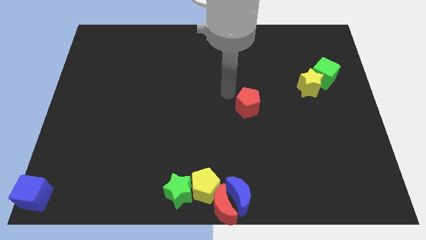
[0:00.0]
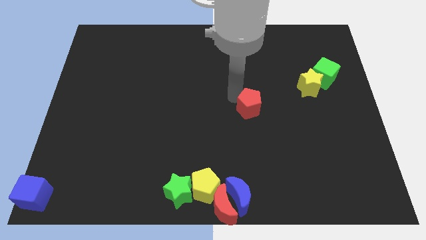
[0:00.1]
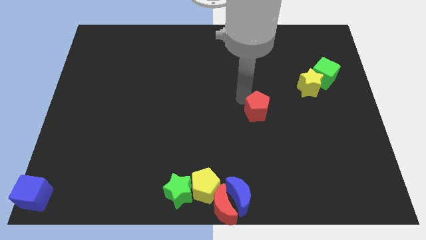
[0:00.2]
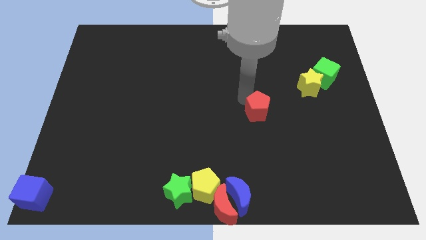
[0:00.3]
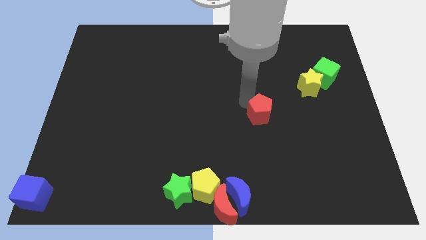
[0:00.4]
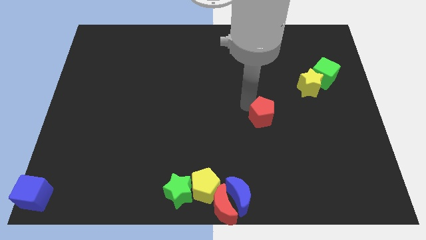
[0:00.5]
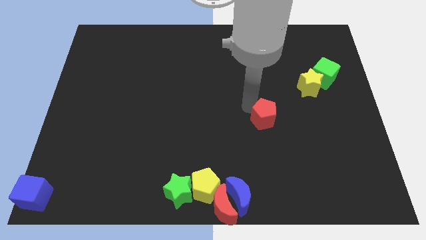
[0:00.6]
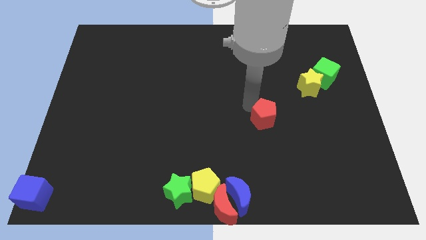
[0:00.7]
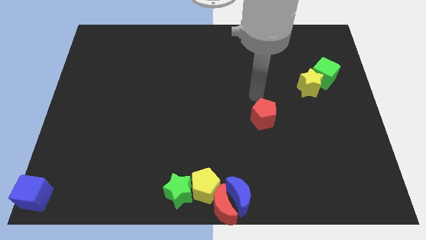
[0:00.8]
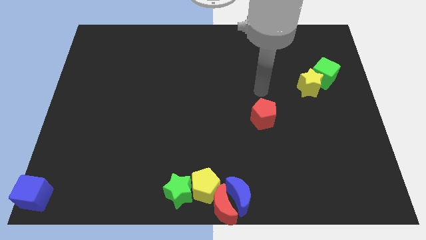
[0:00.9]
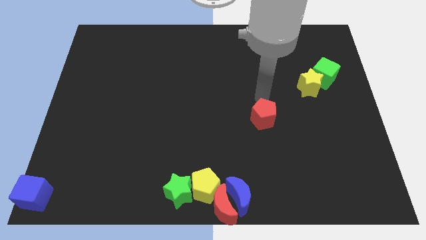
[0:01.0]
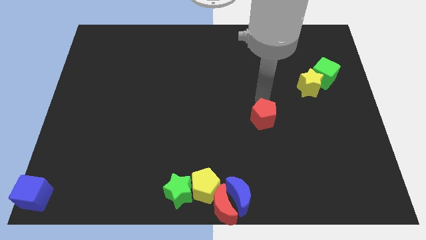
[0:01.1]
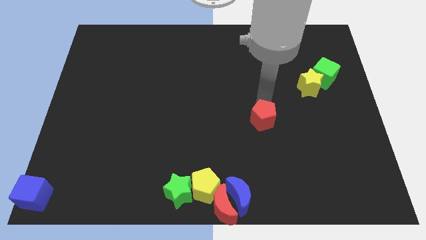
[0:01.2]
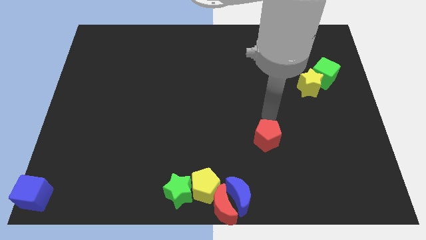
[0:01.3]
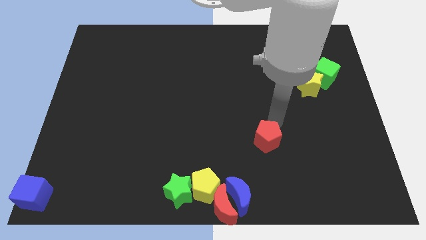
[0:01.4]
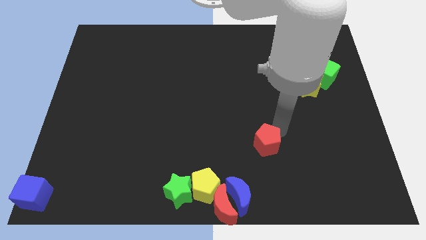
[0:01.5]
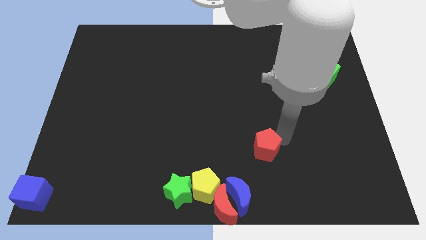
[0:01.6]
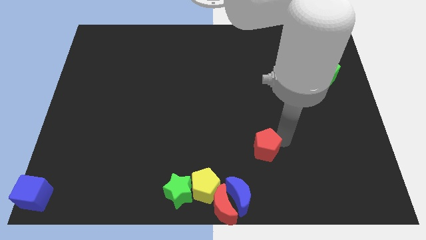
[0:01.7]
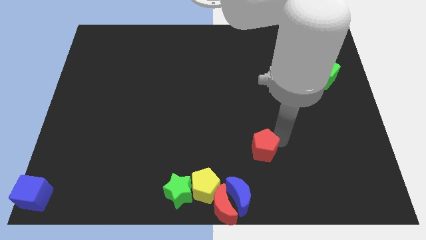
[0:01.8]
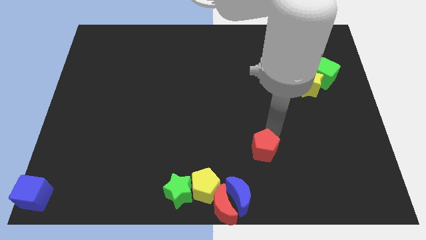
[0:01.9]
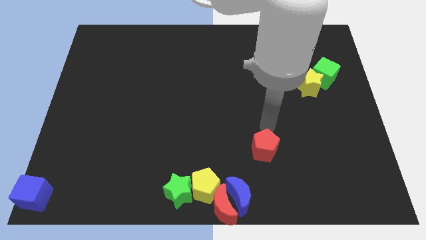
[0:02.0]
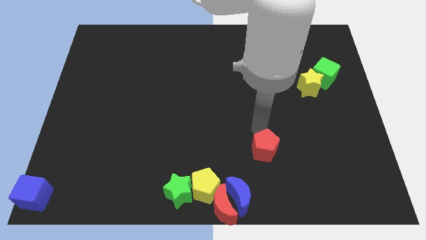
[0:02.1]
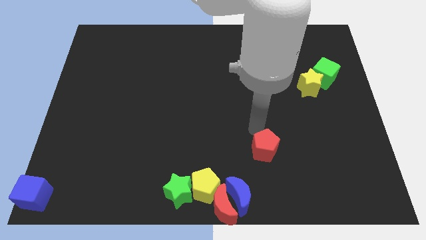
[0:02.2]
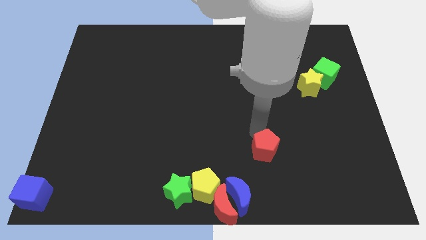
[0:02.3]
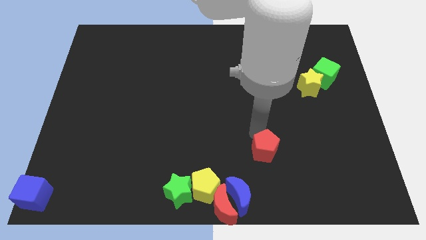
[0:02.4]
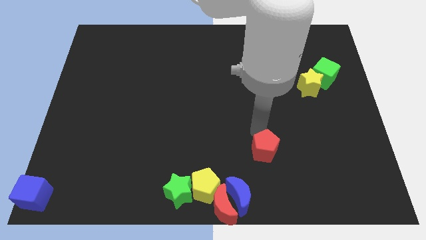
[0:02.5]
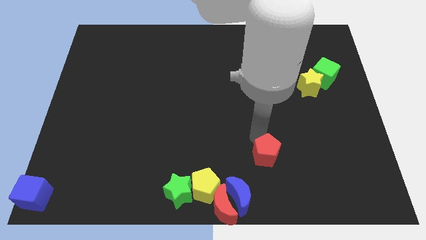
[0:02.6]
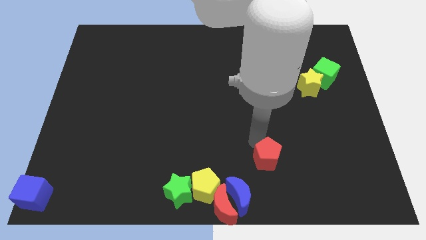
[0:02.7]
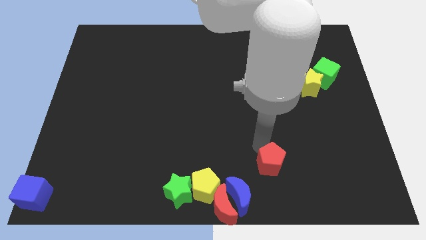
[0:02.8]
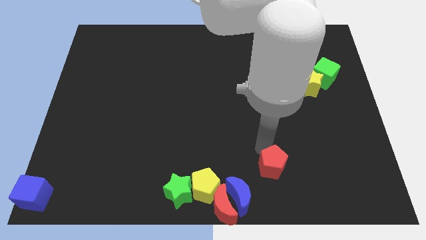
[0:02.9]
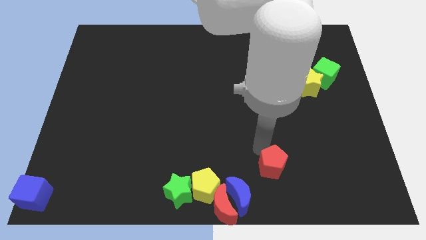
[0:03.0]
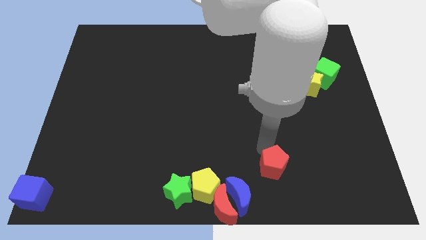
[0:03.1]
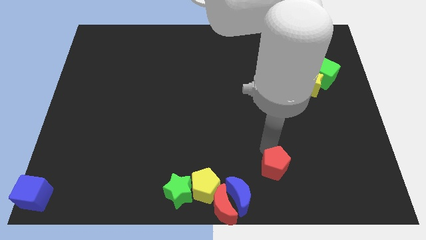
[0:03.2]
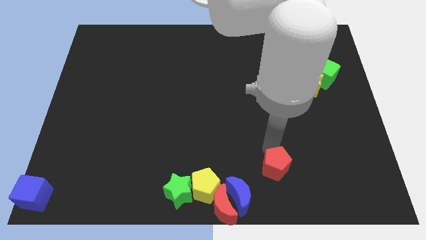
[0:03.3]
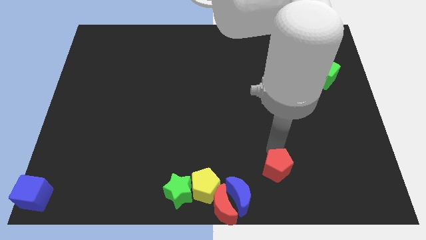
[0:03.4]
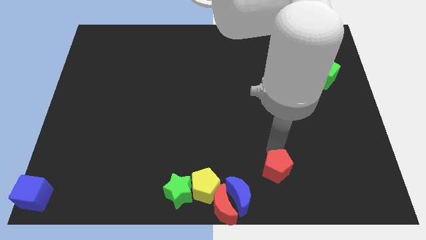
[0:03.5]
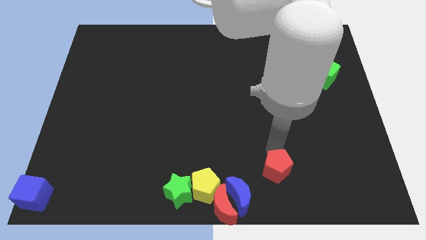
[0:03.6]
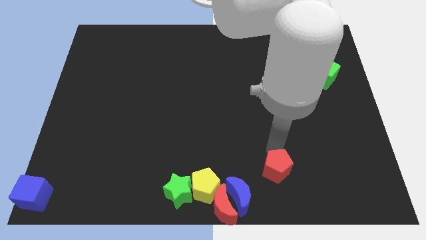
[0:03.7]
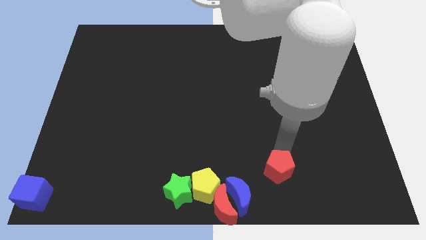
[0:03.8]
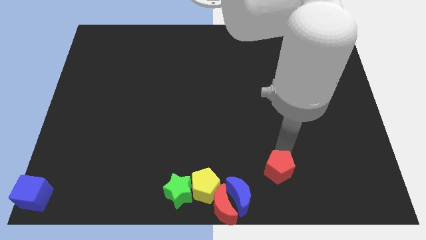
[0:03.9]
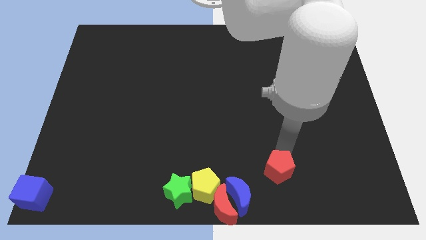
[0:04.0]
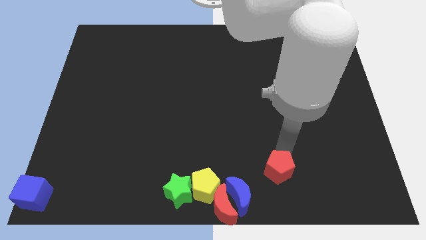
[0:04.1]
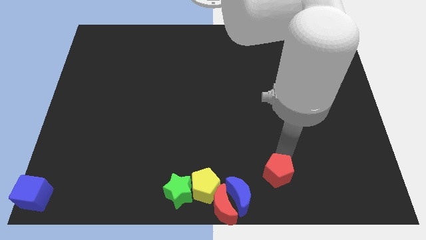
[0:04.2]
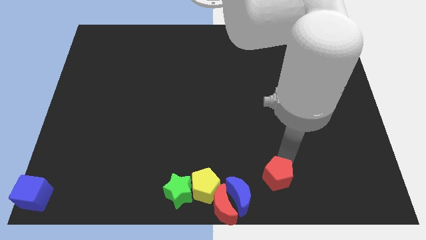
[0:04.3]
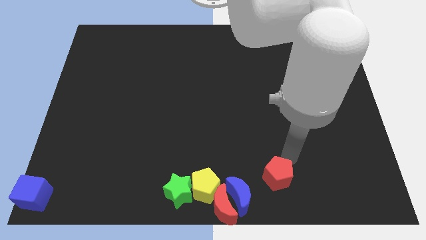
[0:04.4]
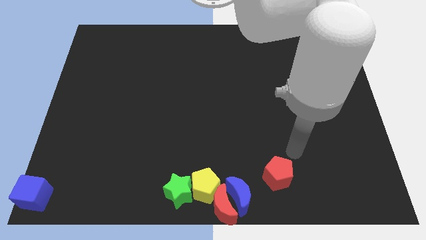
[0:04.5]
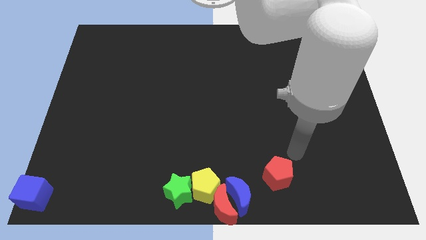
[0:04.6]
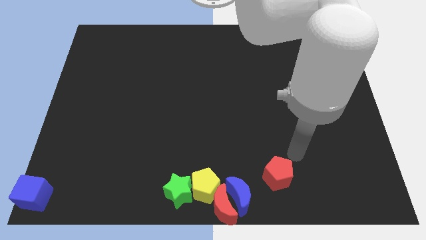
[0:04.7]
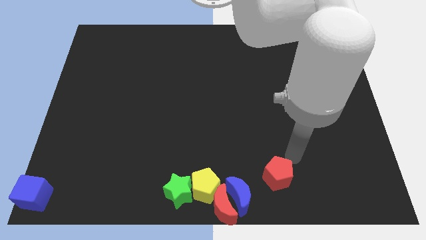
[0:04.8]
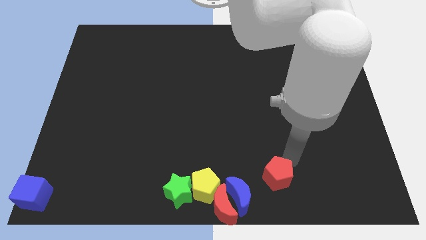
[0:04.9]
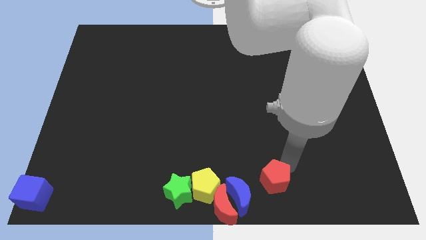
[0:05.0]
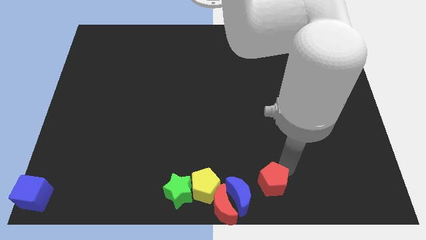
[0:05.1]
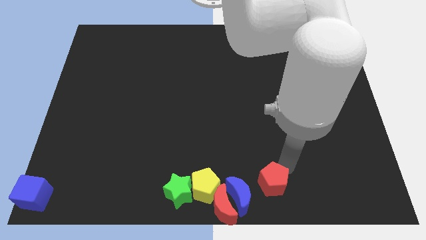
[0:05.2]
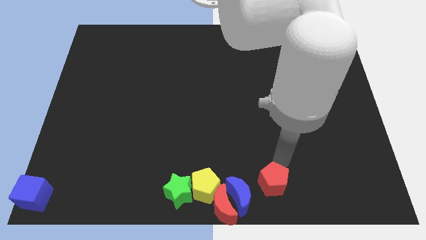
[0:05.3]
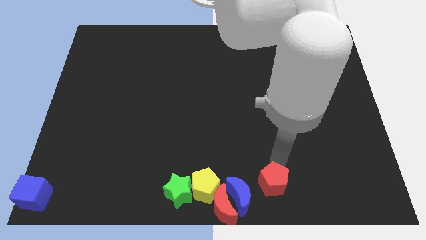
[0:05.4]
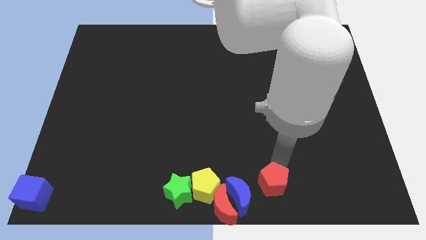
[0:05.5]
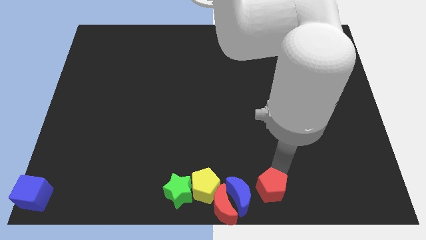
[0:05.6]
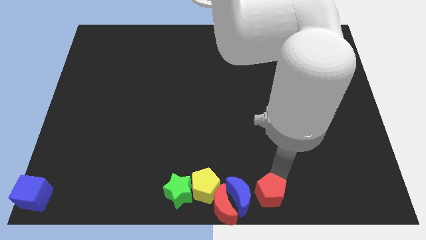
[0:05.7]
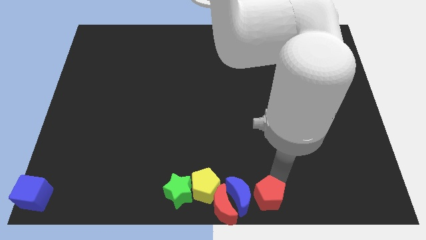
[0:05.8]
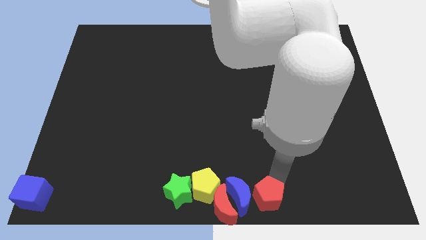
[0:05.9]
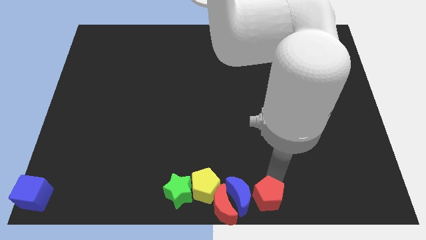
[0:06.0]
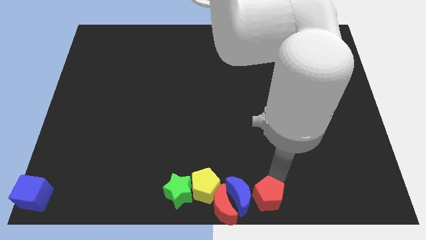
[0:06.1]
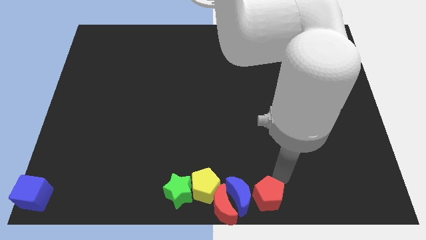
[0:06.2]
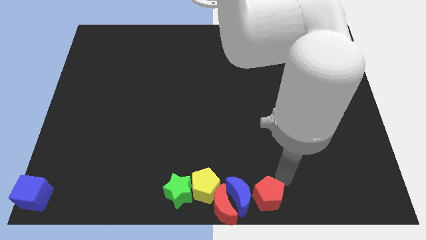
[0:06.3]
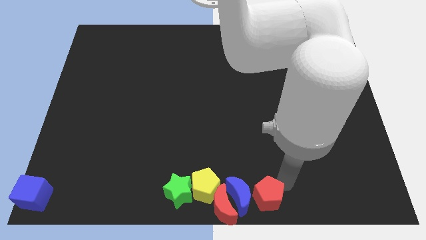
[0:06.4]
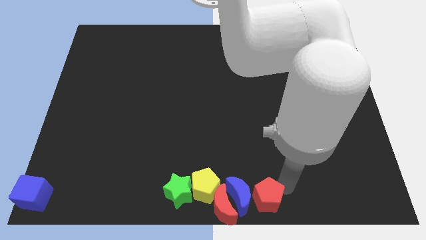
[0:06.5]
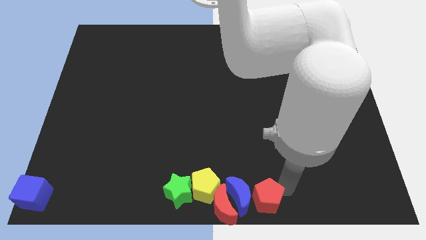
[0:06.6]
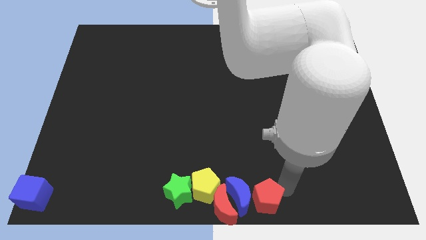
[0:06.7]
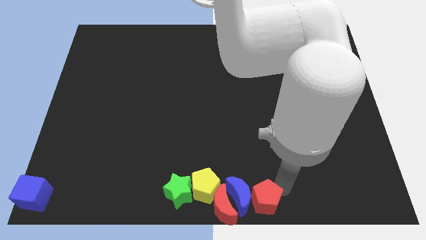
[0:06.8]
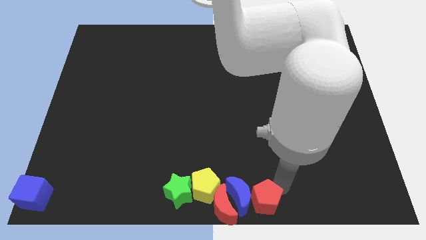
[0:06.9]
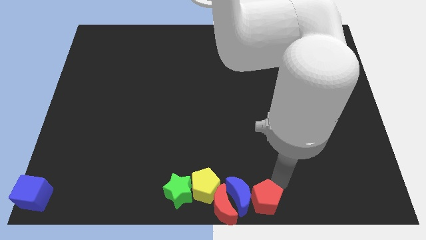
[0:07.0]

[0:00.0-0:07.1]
place the red pentagon to the right of blue crescent

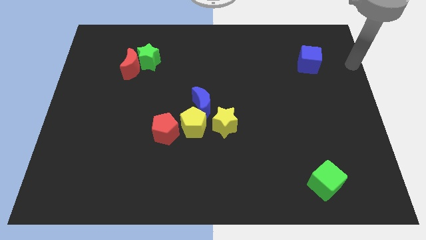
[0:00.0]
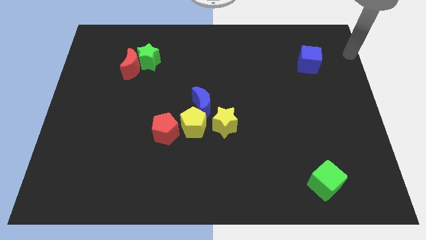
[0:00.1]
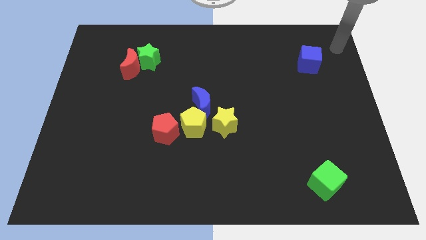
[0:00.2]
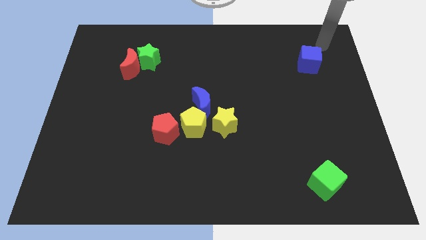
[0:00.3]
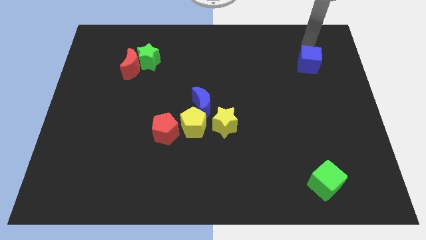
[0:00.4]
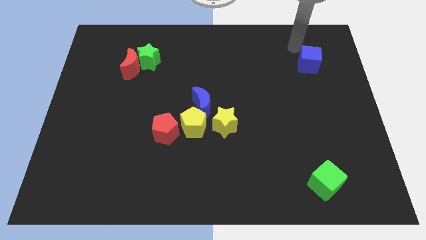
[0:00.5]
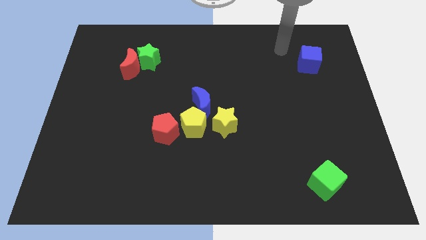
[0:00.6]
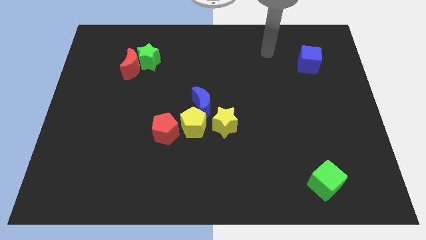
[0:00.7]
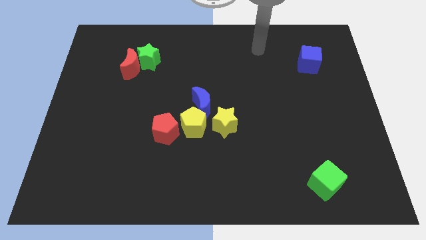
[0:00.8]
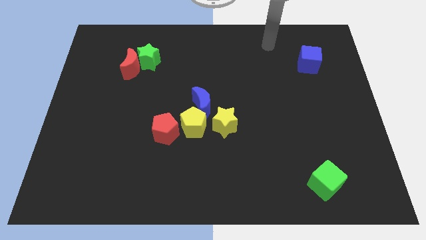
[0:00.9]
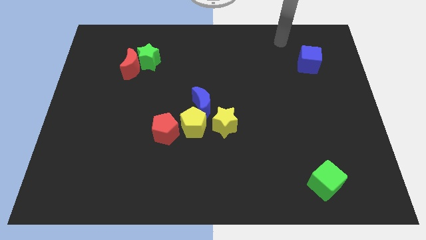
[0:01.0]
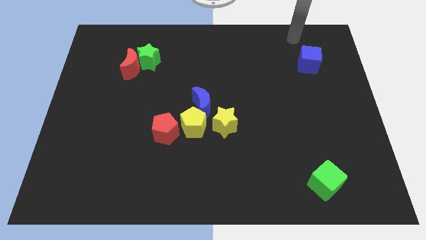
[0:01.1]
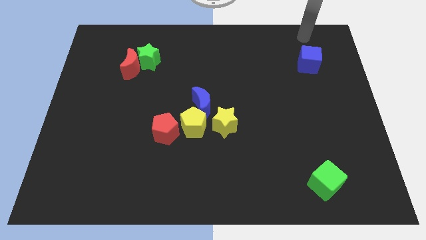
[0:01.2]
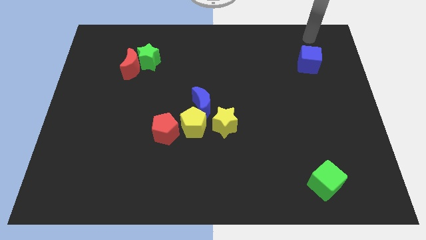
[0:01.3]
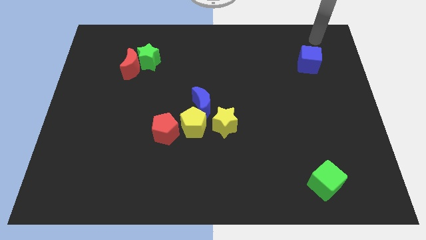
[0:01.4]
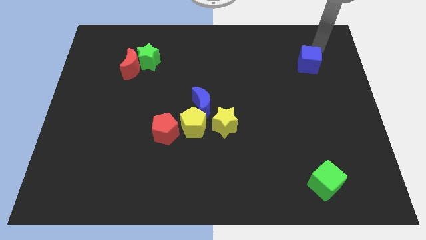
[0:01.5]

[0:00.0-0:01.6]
move your arm to the top right of the blue cube

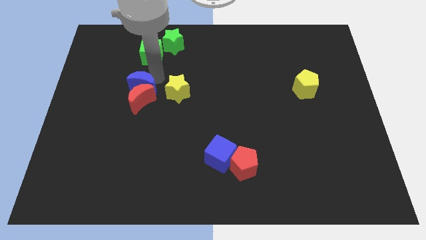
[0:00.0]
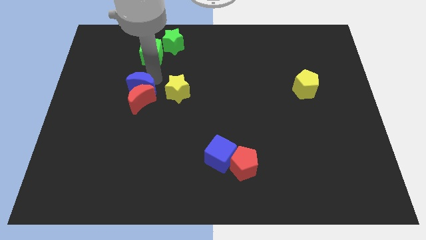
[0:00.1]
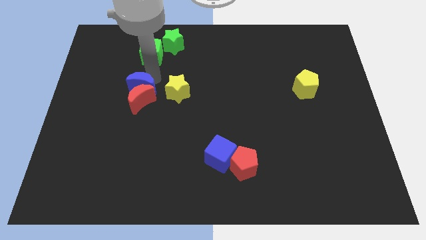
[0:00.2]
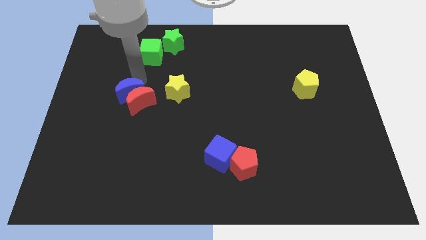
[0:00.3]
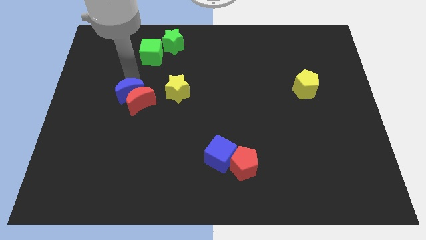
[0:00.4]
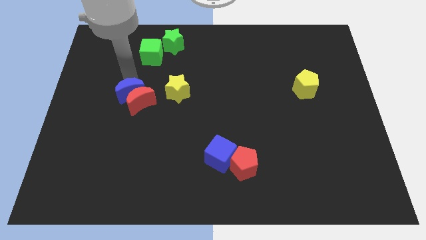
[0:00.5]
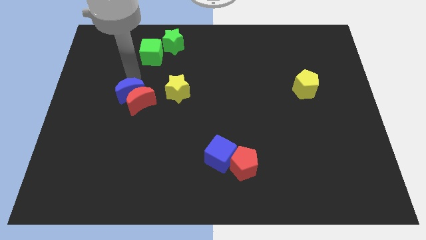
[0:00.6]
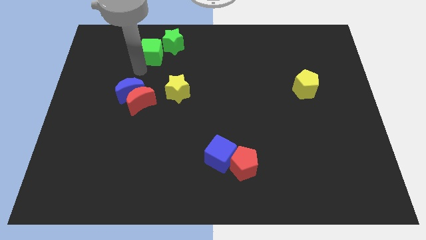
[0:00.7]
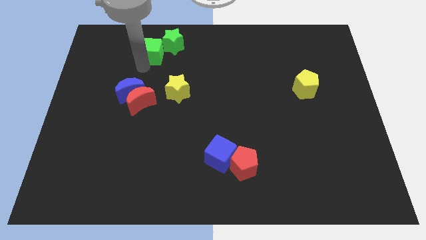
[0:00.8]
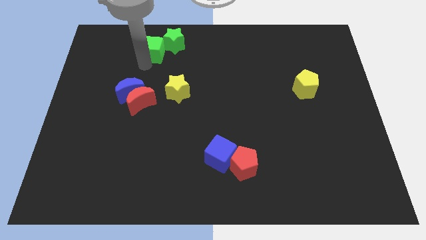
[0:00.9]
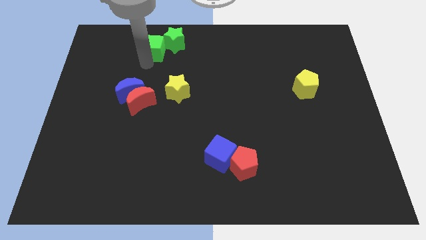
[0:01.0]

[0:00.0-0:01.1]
slightly push the blue moon into the red moon
